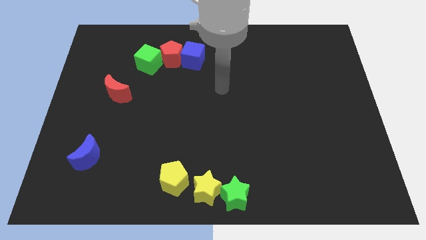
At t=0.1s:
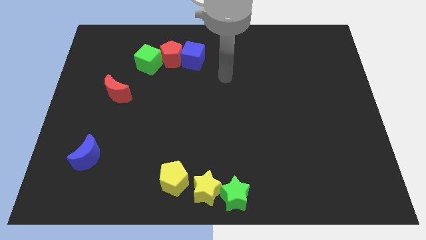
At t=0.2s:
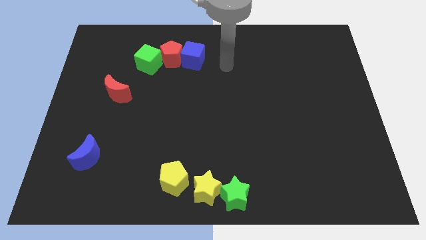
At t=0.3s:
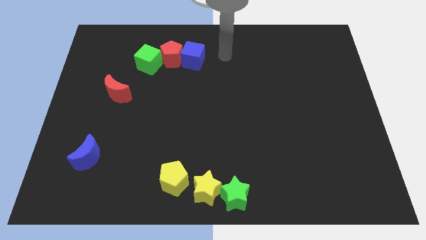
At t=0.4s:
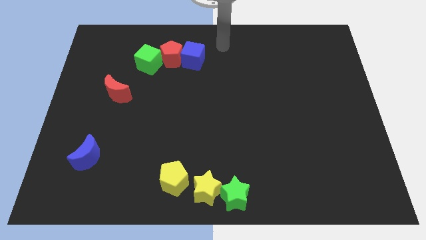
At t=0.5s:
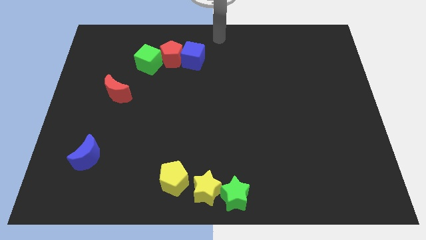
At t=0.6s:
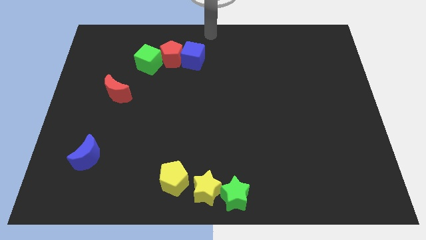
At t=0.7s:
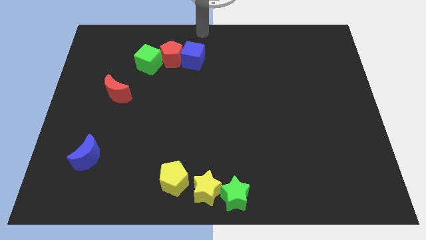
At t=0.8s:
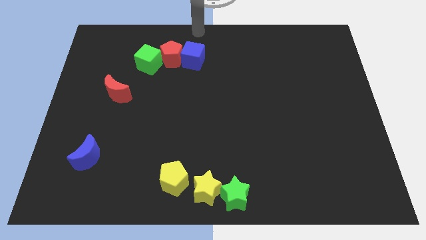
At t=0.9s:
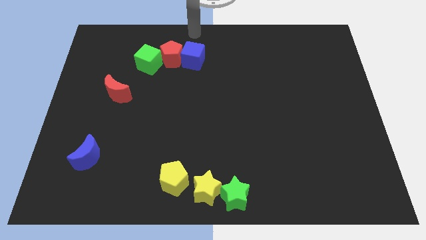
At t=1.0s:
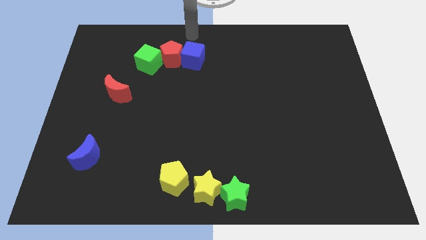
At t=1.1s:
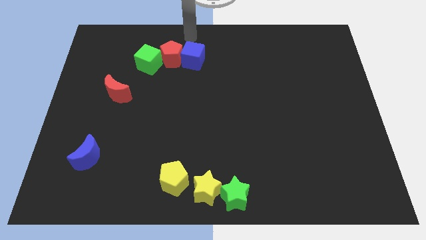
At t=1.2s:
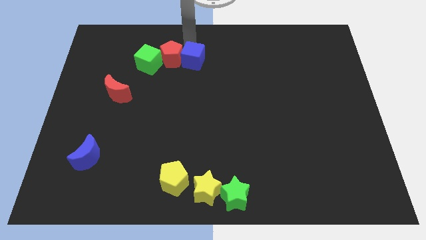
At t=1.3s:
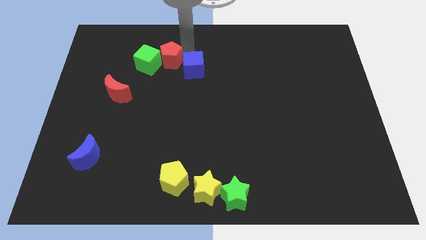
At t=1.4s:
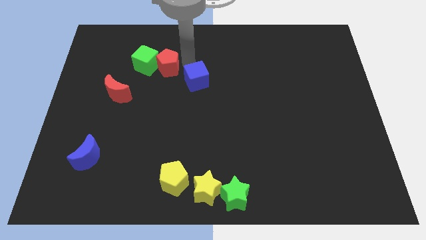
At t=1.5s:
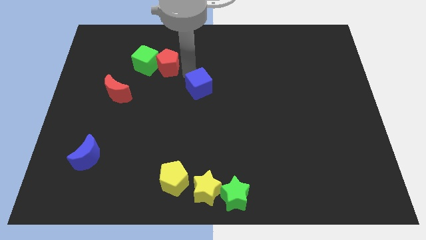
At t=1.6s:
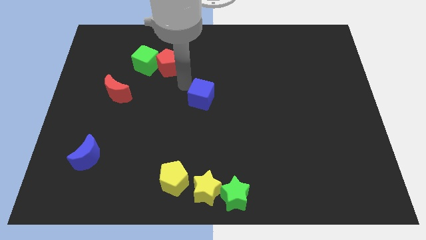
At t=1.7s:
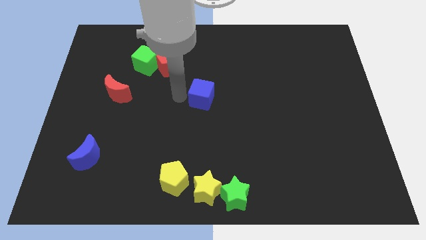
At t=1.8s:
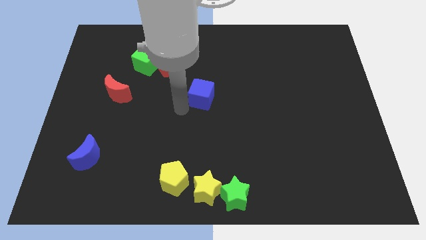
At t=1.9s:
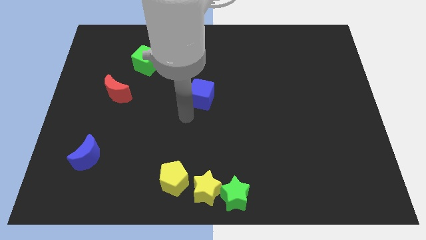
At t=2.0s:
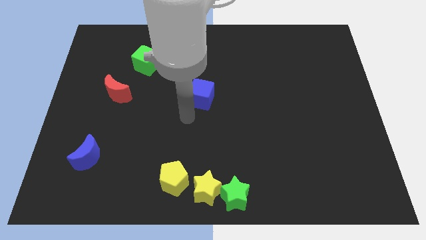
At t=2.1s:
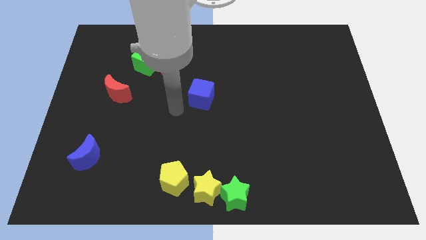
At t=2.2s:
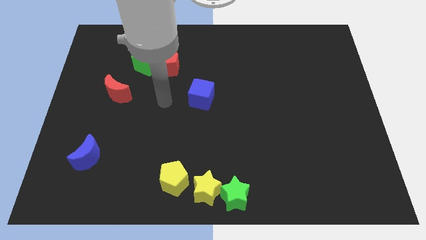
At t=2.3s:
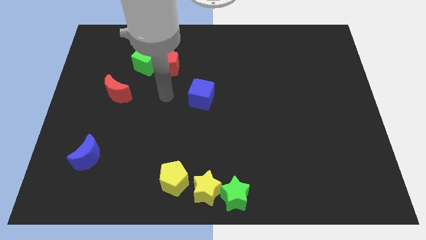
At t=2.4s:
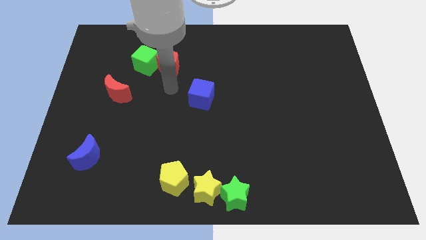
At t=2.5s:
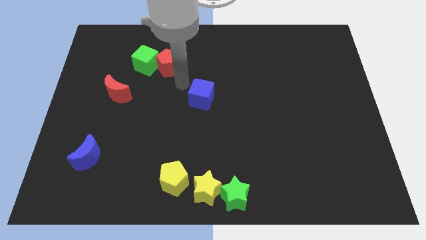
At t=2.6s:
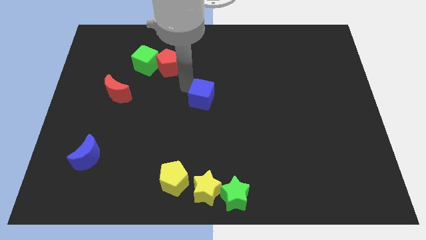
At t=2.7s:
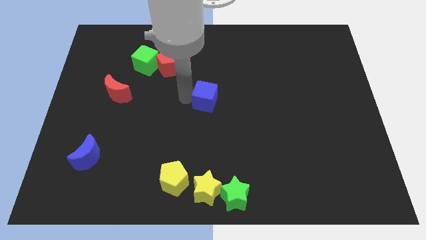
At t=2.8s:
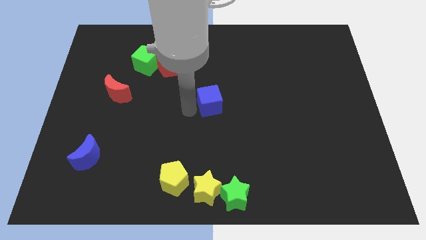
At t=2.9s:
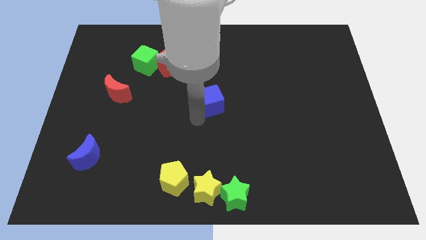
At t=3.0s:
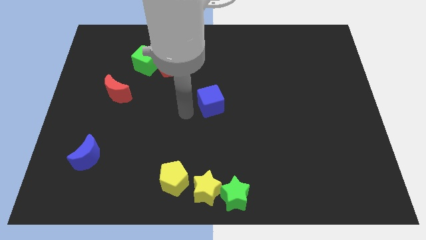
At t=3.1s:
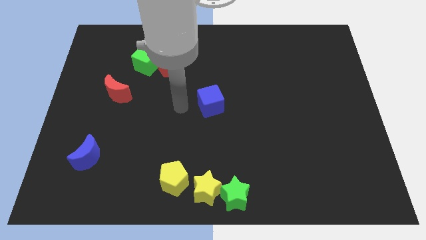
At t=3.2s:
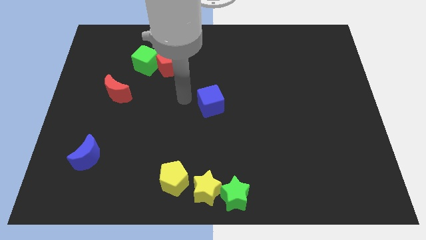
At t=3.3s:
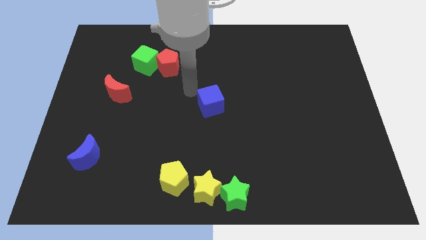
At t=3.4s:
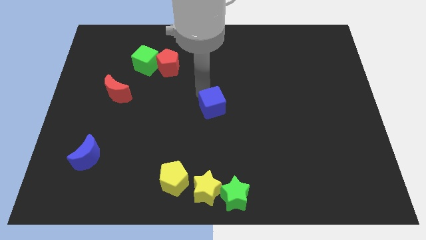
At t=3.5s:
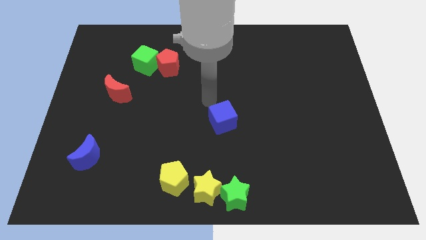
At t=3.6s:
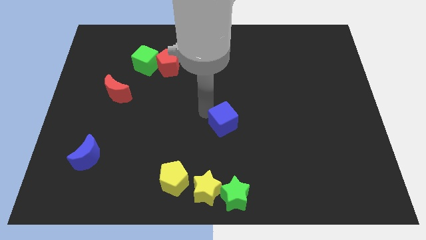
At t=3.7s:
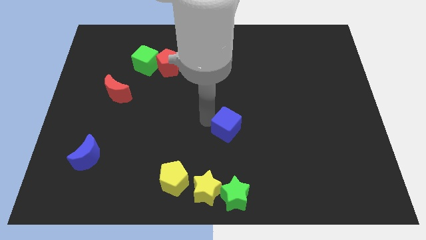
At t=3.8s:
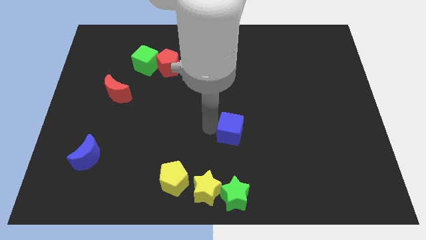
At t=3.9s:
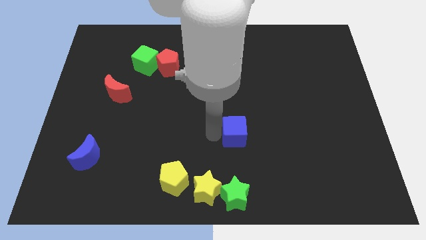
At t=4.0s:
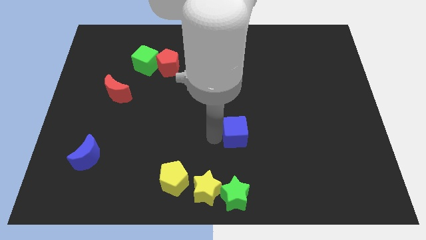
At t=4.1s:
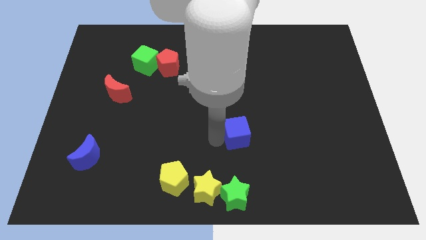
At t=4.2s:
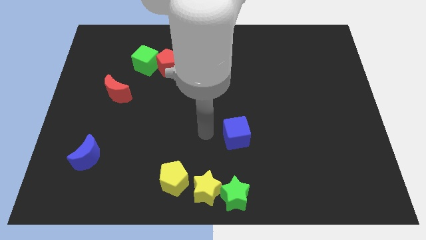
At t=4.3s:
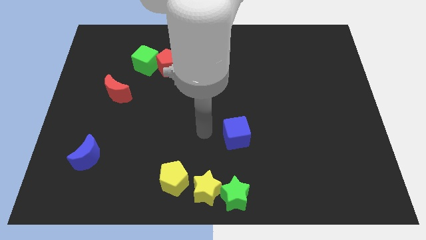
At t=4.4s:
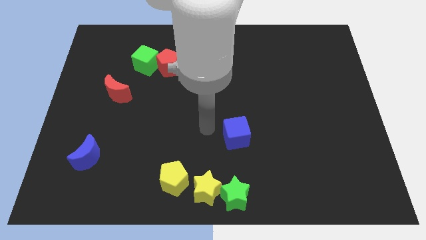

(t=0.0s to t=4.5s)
put the blue cube vertically above the green star

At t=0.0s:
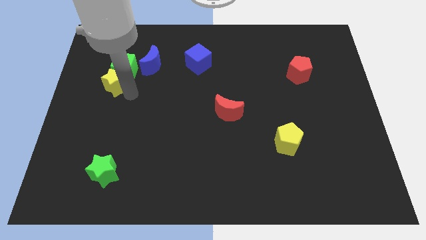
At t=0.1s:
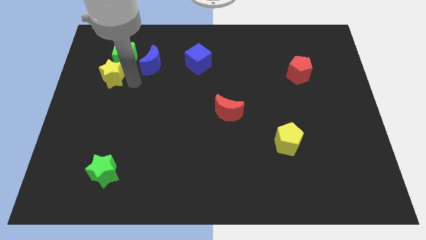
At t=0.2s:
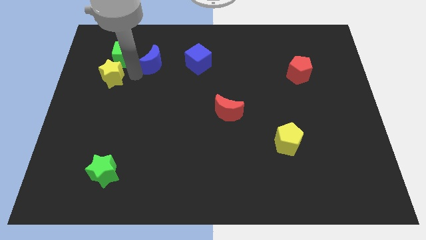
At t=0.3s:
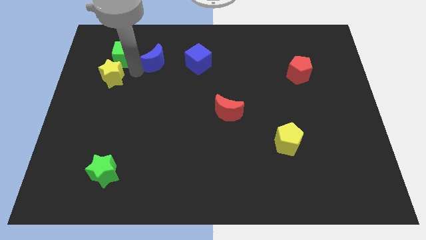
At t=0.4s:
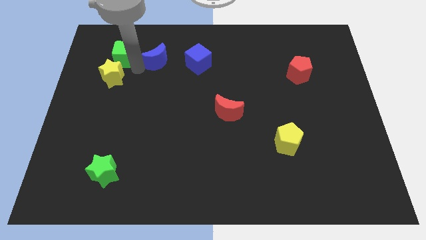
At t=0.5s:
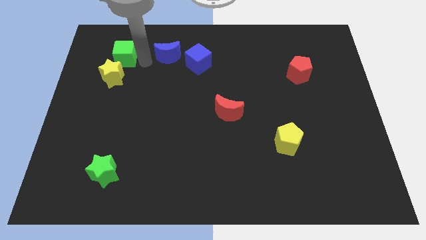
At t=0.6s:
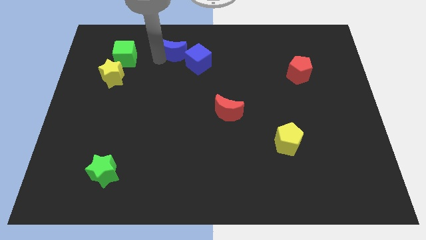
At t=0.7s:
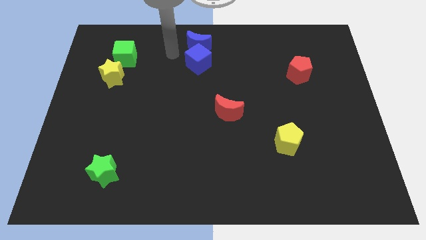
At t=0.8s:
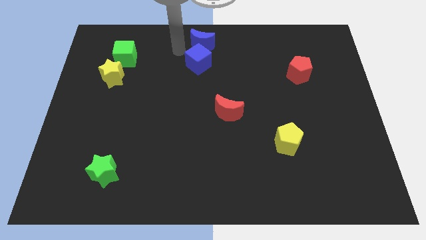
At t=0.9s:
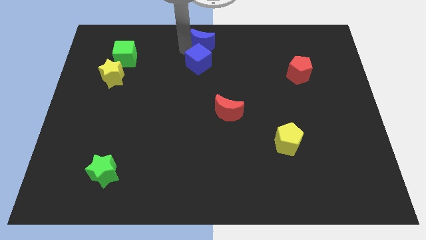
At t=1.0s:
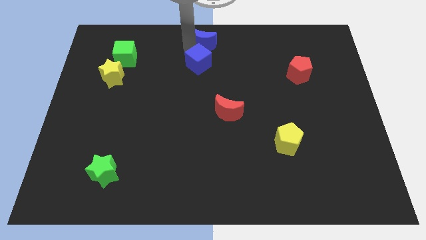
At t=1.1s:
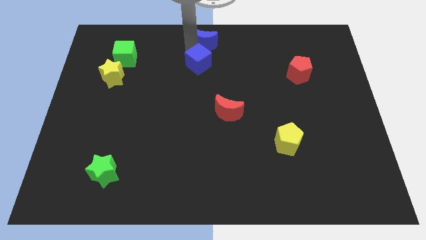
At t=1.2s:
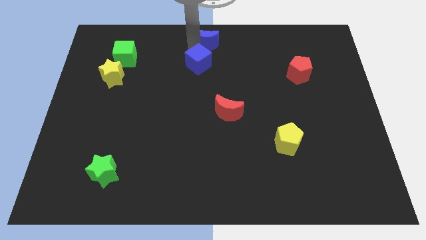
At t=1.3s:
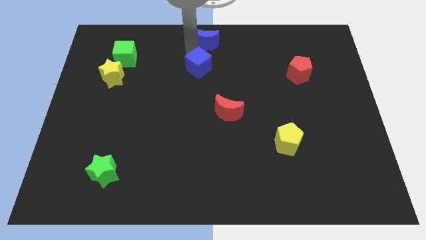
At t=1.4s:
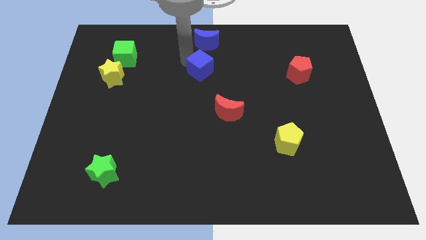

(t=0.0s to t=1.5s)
place the blue crescent to the top center of the board

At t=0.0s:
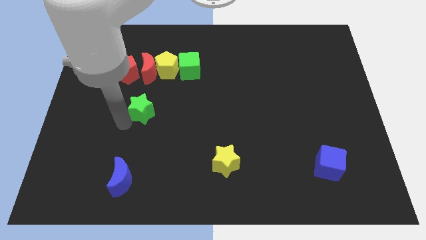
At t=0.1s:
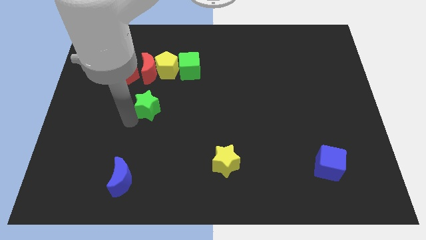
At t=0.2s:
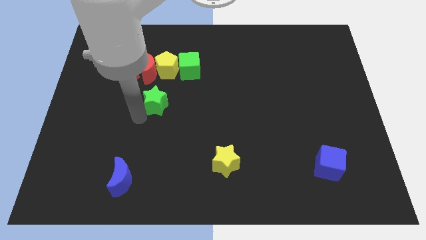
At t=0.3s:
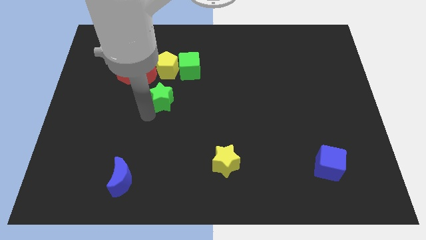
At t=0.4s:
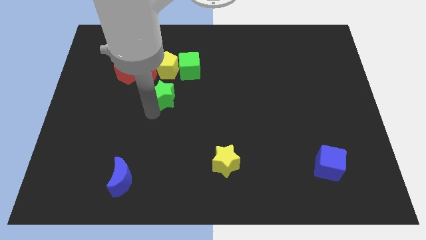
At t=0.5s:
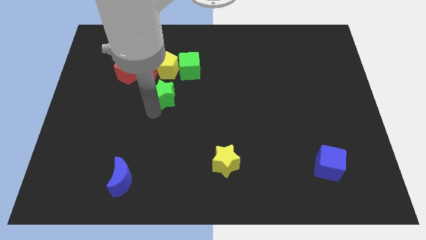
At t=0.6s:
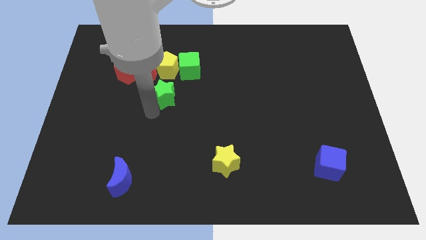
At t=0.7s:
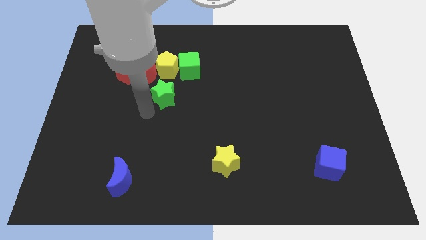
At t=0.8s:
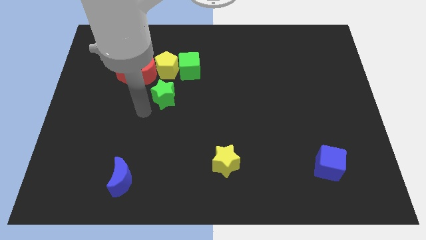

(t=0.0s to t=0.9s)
push the green star diagonally bottom right to the red moon

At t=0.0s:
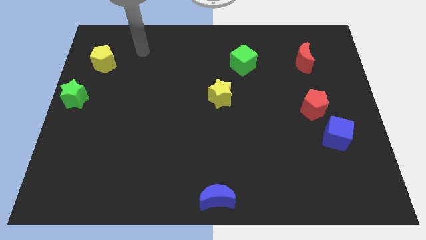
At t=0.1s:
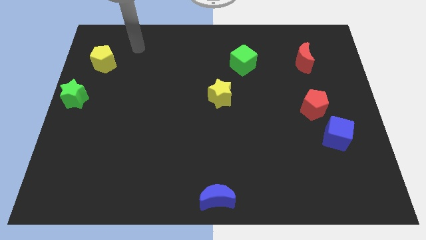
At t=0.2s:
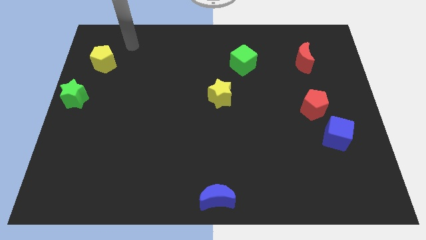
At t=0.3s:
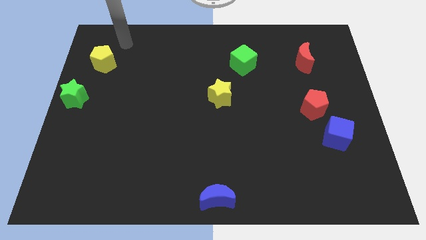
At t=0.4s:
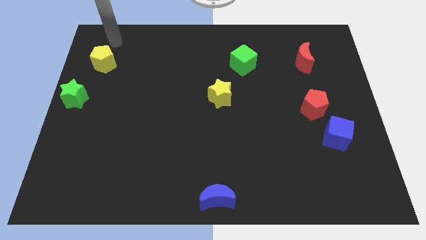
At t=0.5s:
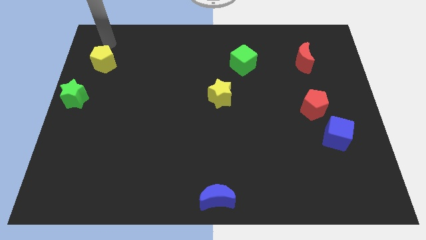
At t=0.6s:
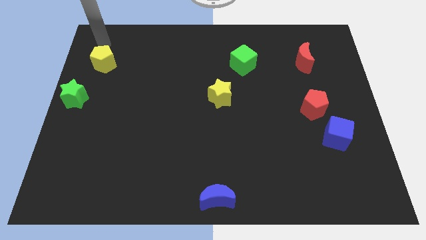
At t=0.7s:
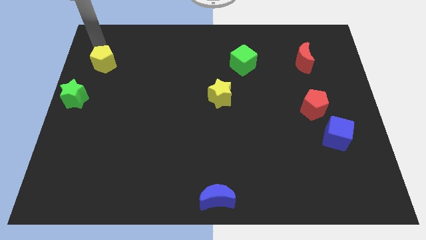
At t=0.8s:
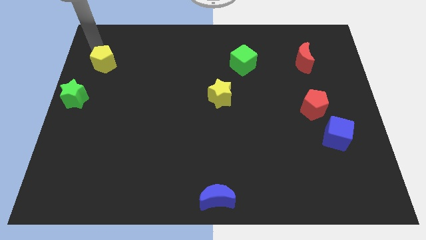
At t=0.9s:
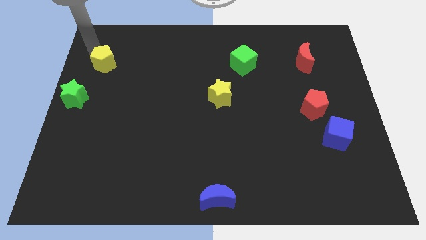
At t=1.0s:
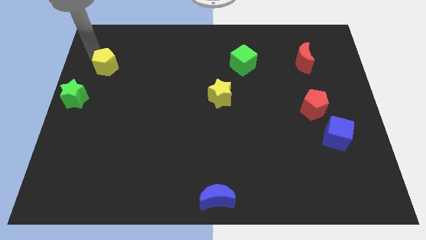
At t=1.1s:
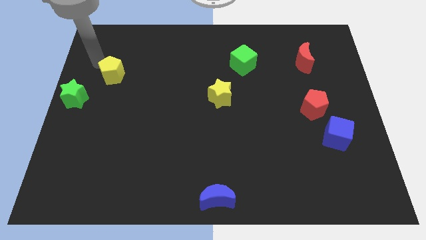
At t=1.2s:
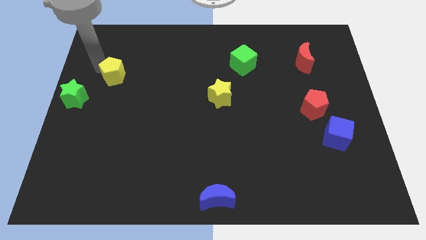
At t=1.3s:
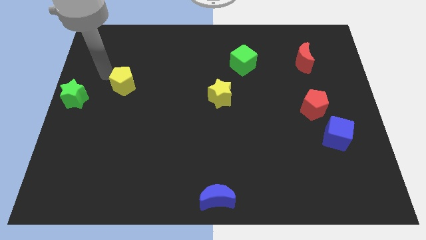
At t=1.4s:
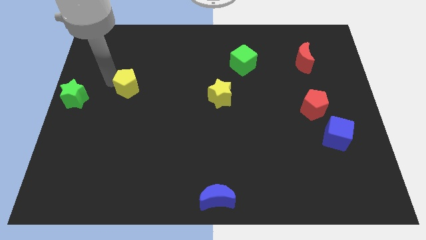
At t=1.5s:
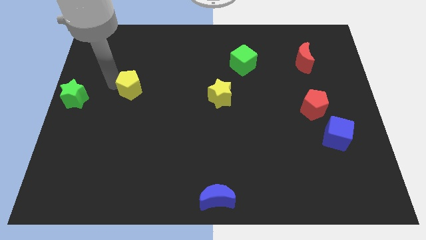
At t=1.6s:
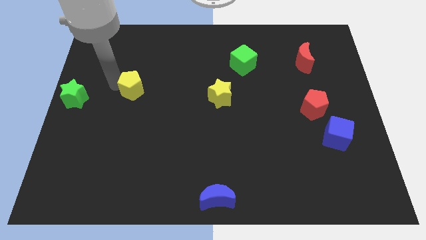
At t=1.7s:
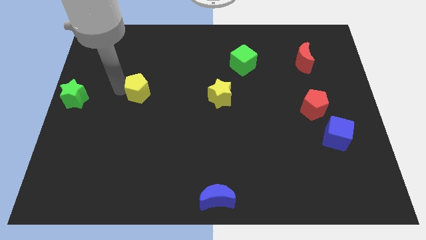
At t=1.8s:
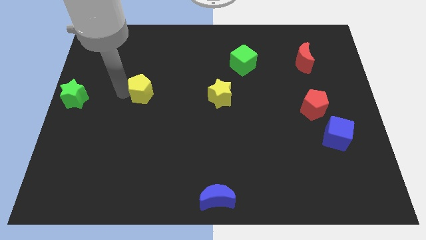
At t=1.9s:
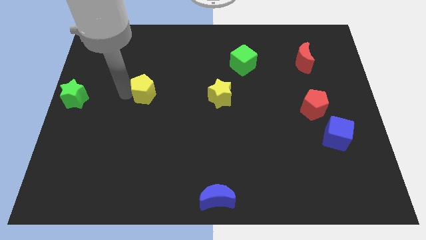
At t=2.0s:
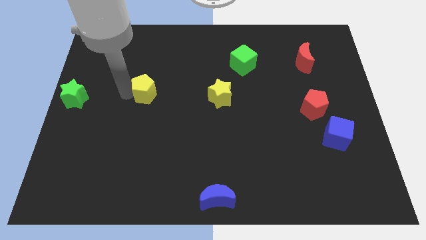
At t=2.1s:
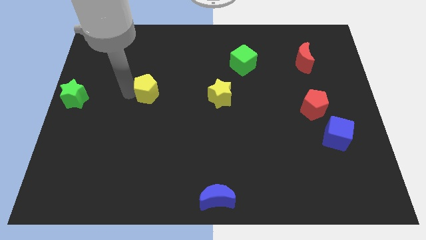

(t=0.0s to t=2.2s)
place the yellow pentagon in between the yellow star and green star
